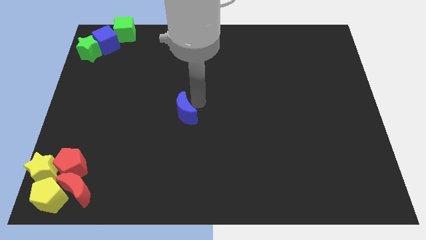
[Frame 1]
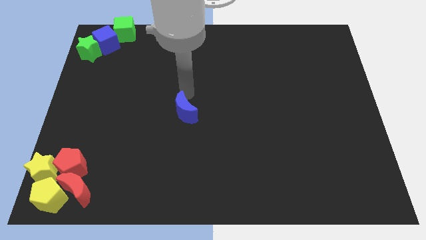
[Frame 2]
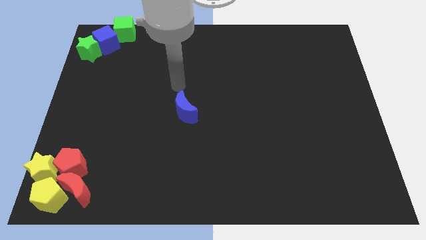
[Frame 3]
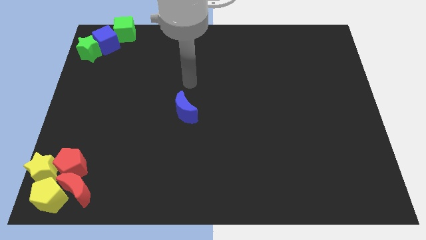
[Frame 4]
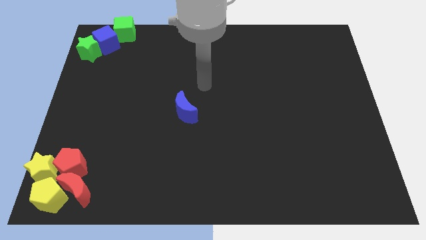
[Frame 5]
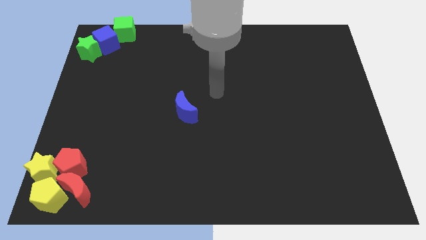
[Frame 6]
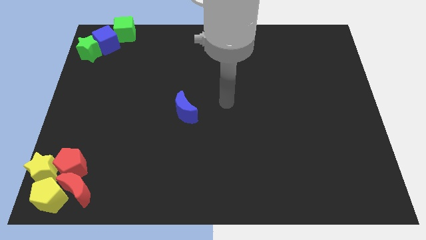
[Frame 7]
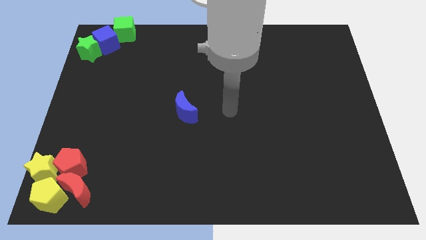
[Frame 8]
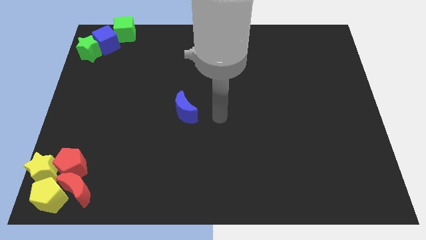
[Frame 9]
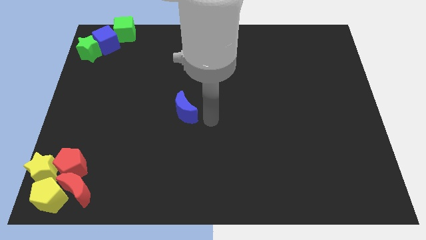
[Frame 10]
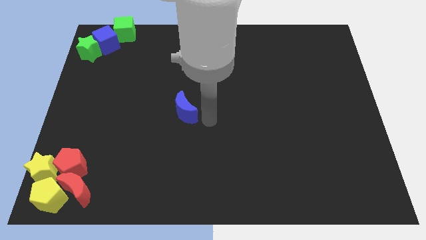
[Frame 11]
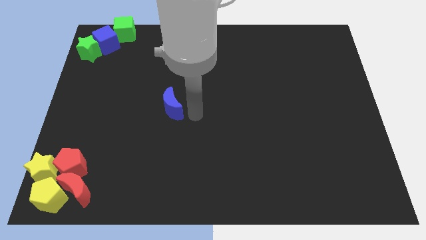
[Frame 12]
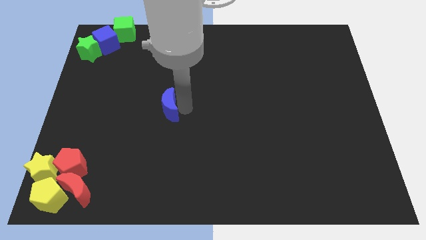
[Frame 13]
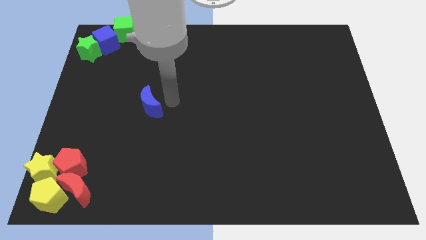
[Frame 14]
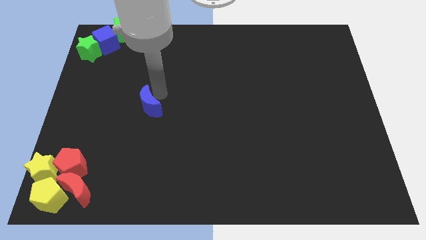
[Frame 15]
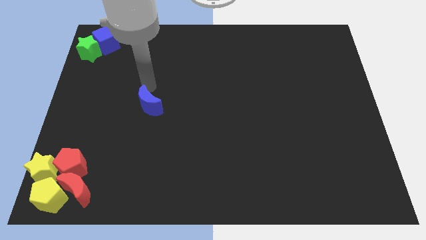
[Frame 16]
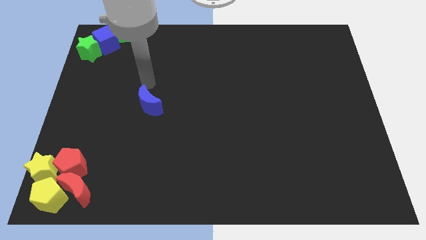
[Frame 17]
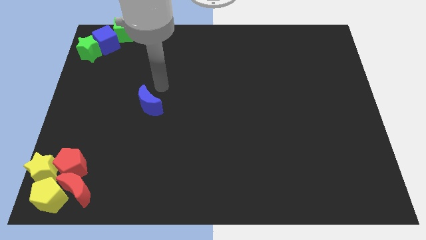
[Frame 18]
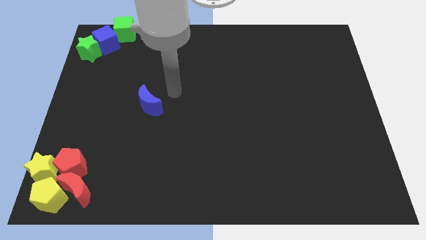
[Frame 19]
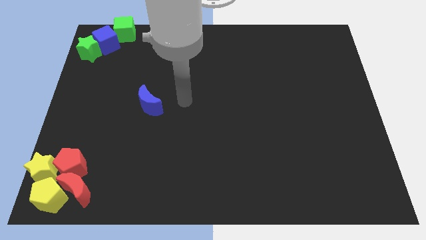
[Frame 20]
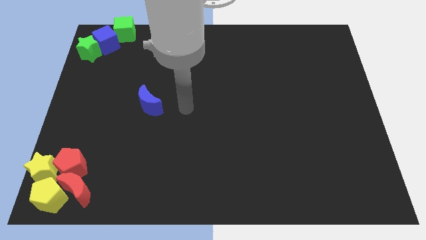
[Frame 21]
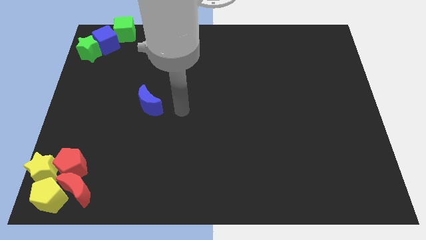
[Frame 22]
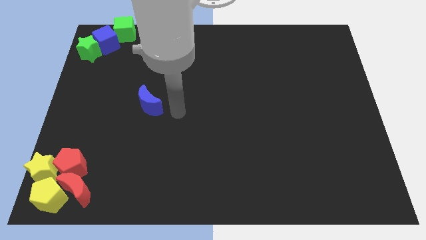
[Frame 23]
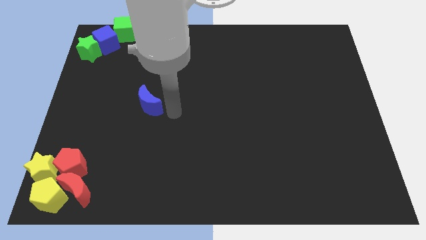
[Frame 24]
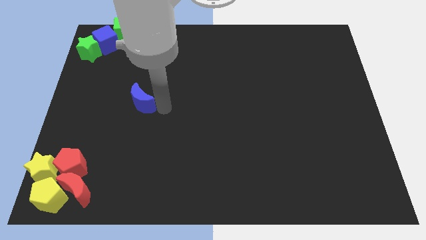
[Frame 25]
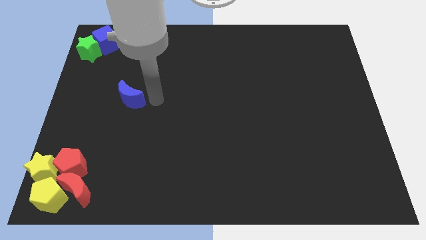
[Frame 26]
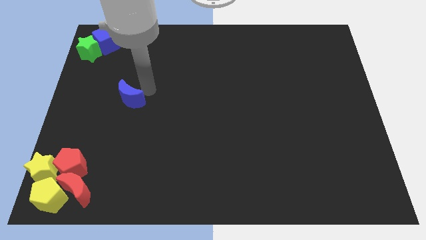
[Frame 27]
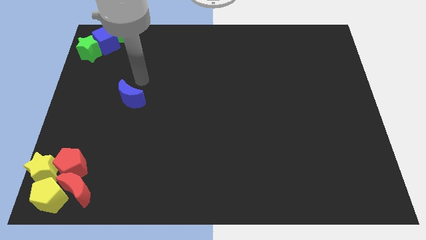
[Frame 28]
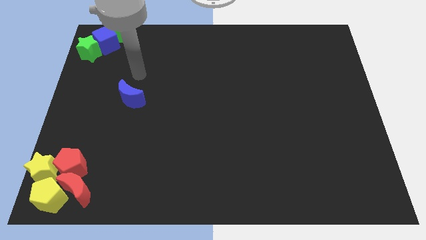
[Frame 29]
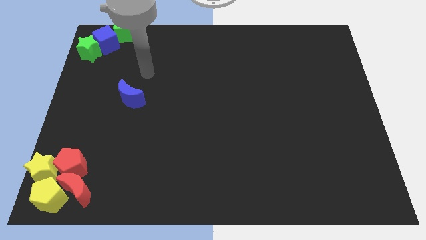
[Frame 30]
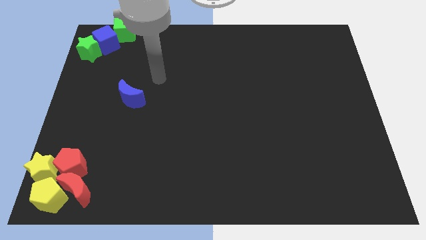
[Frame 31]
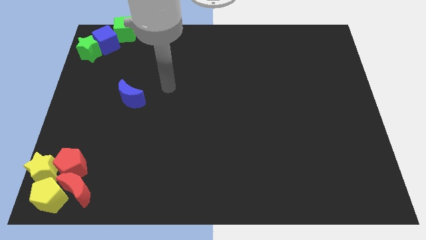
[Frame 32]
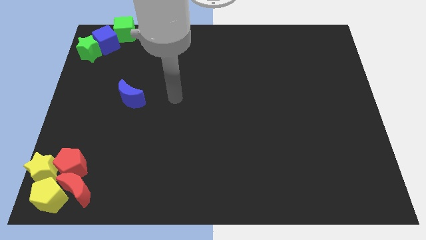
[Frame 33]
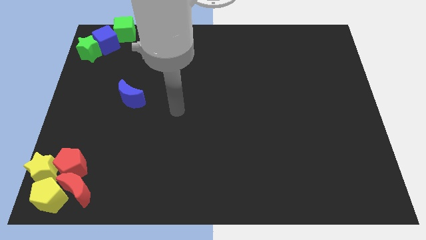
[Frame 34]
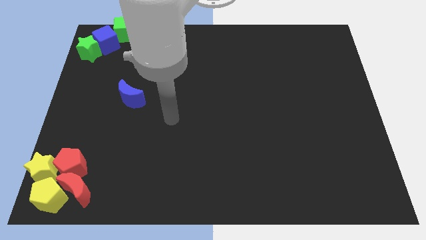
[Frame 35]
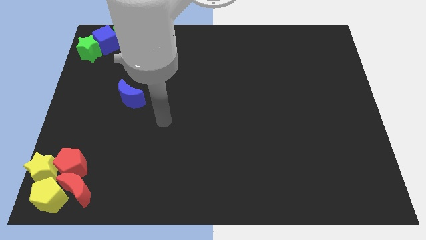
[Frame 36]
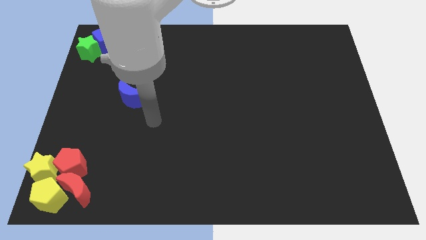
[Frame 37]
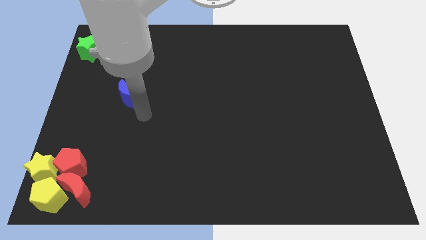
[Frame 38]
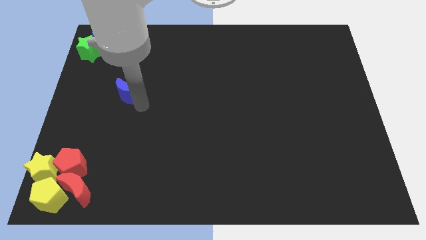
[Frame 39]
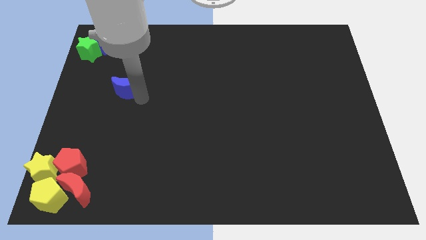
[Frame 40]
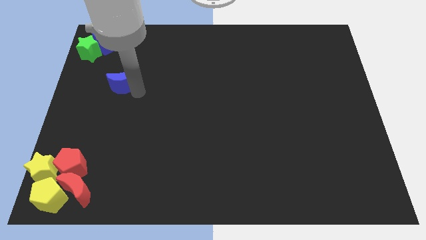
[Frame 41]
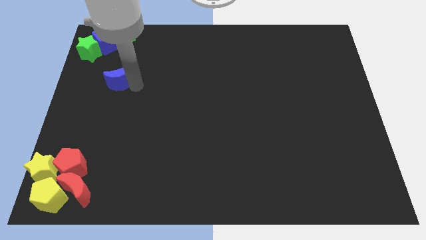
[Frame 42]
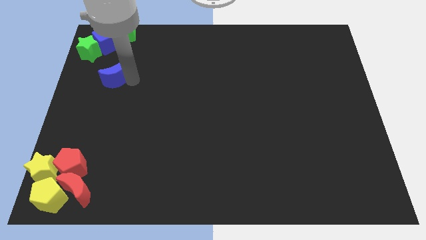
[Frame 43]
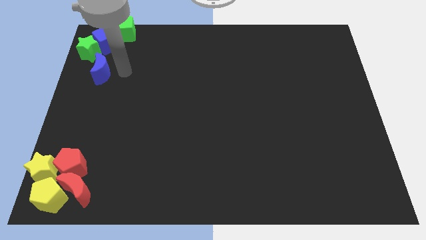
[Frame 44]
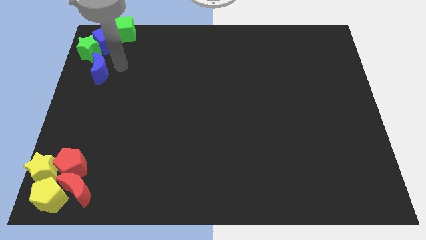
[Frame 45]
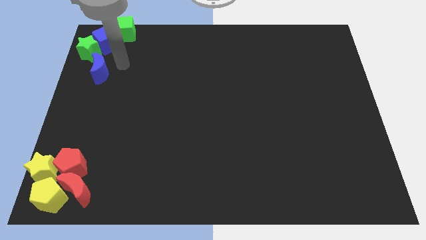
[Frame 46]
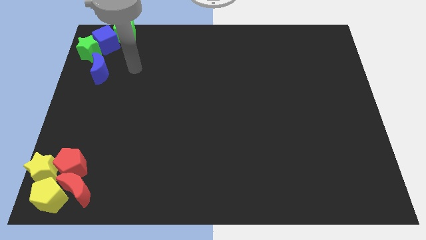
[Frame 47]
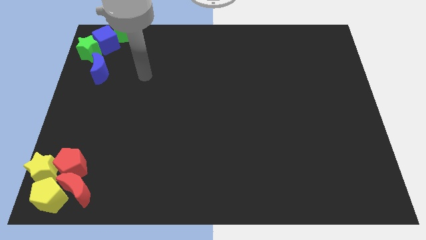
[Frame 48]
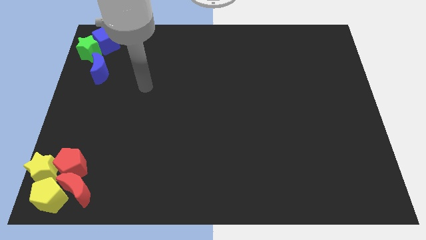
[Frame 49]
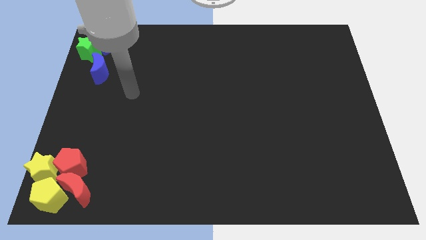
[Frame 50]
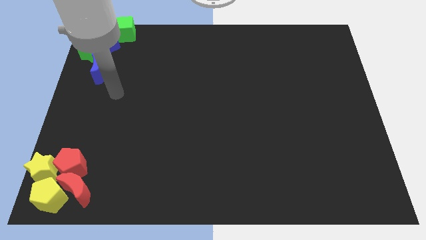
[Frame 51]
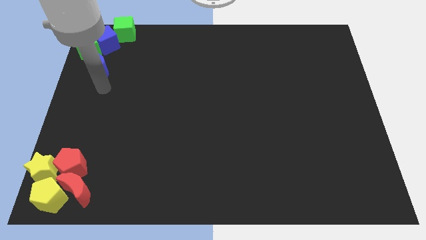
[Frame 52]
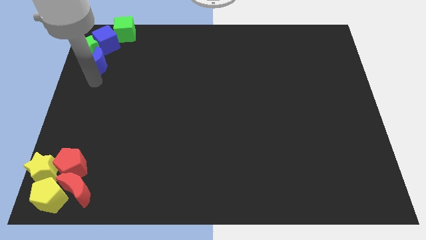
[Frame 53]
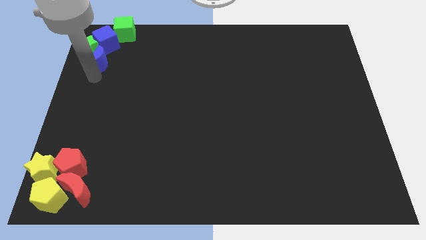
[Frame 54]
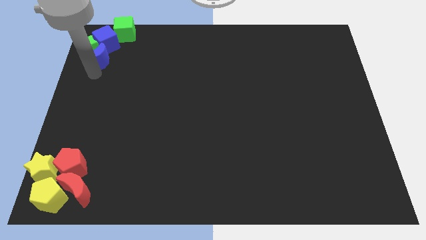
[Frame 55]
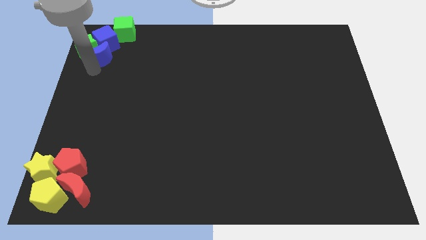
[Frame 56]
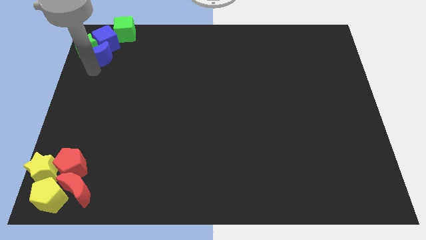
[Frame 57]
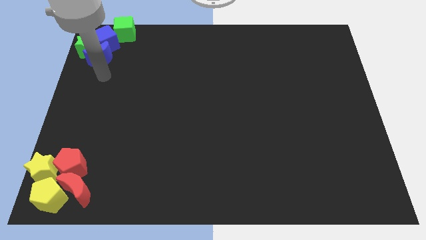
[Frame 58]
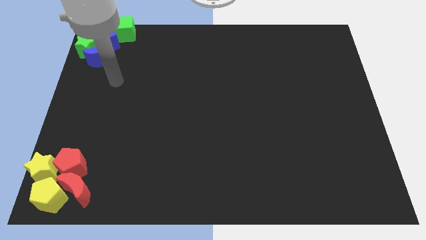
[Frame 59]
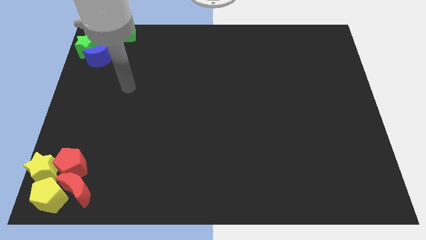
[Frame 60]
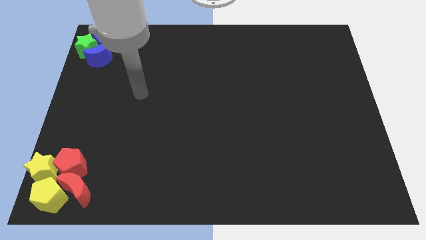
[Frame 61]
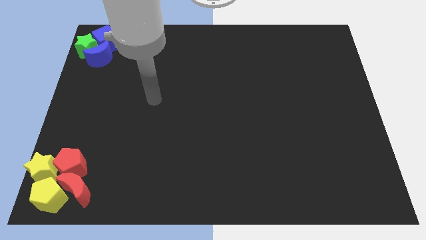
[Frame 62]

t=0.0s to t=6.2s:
move the blue crescent into the green star

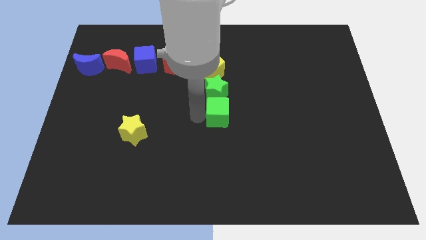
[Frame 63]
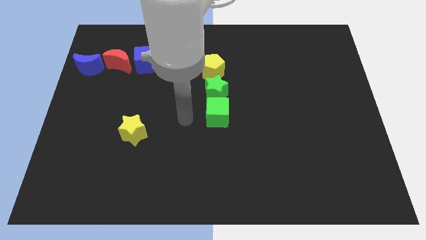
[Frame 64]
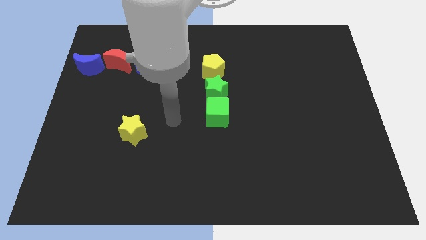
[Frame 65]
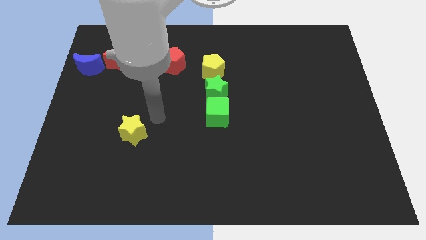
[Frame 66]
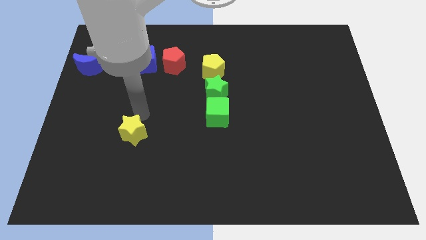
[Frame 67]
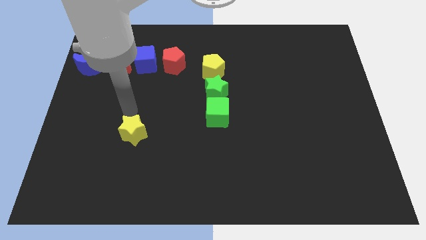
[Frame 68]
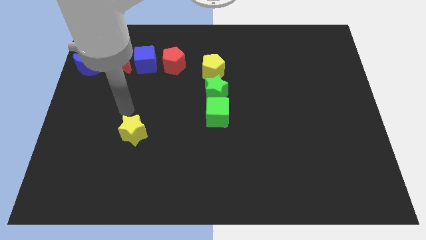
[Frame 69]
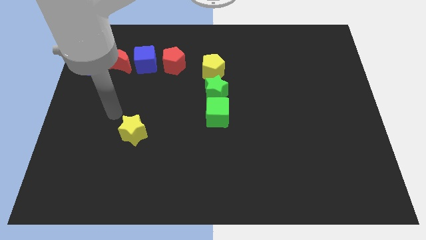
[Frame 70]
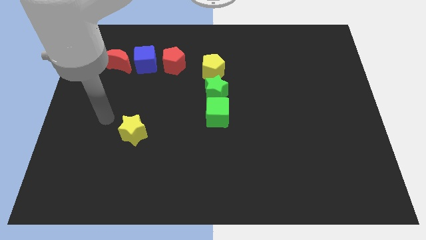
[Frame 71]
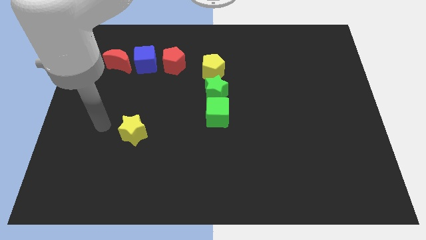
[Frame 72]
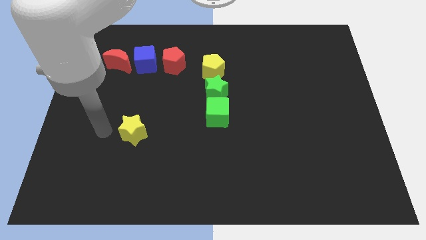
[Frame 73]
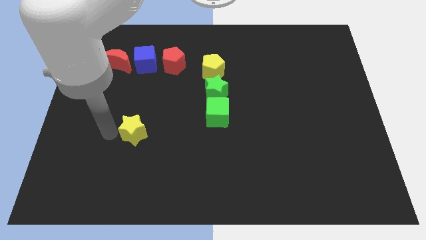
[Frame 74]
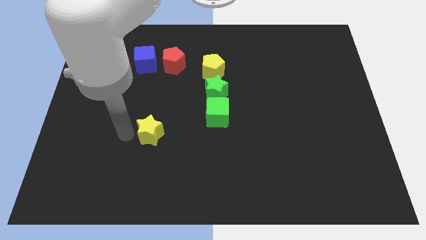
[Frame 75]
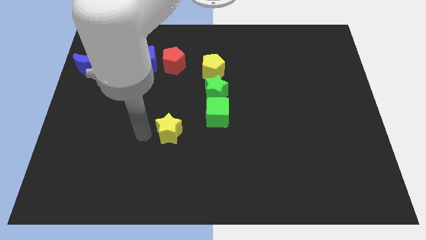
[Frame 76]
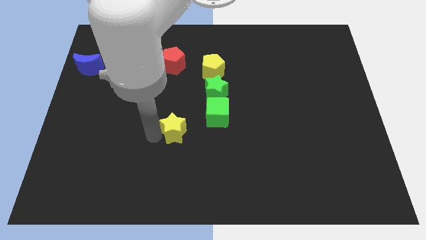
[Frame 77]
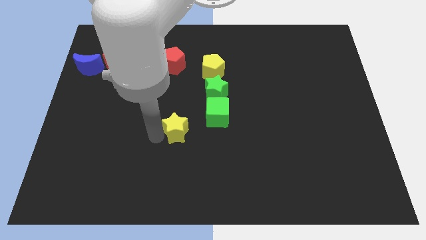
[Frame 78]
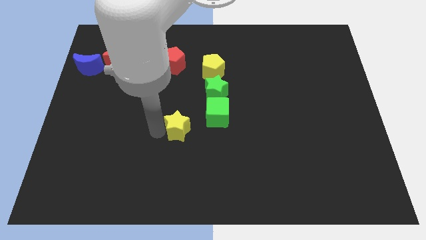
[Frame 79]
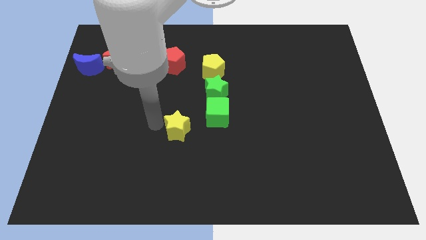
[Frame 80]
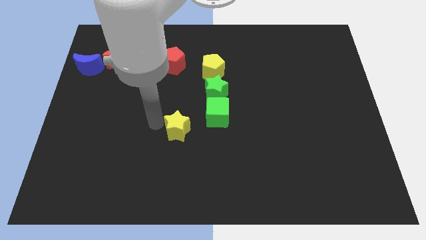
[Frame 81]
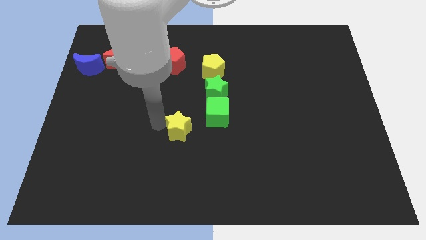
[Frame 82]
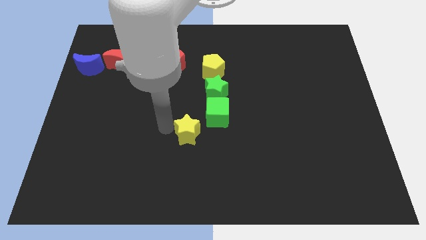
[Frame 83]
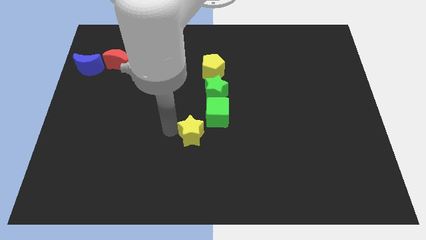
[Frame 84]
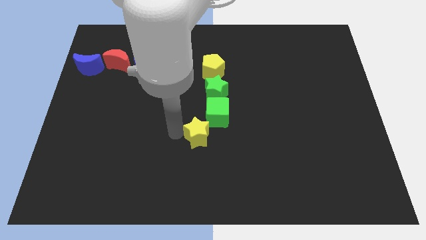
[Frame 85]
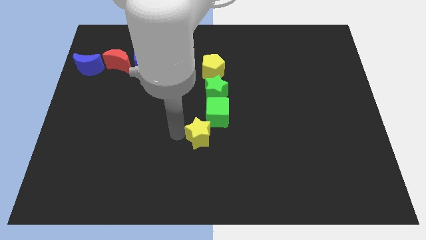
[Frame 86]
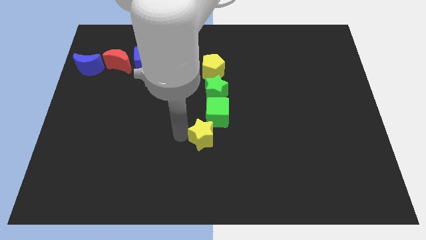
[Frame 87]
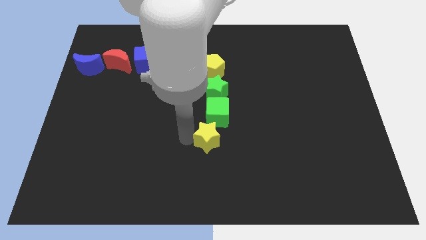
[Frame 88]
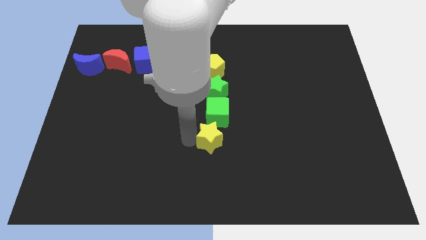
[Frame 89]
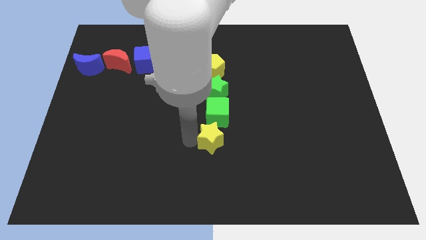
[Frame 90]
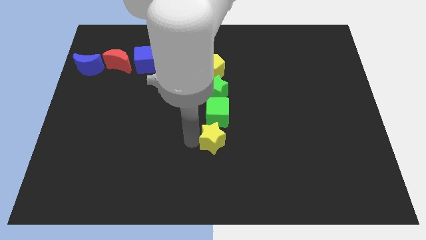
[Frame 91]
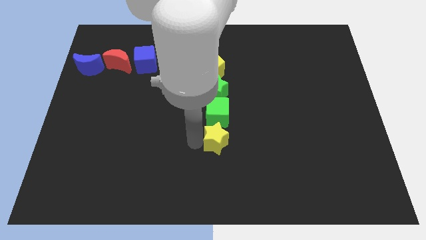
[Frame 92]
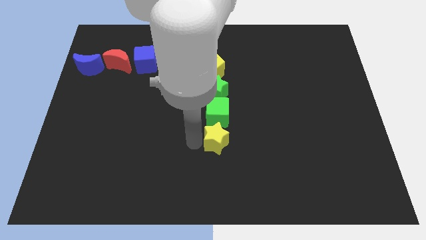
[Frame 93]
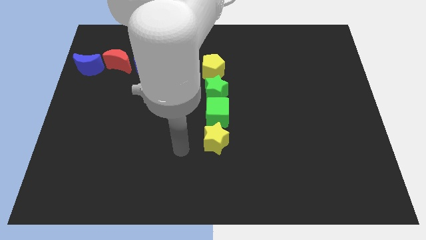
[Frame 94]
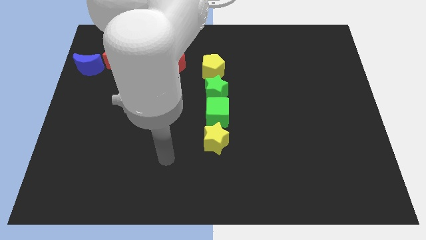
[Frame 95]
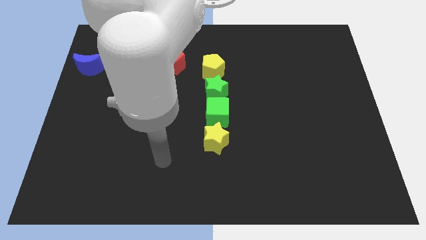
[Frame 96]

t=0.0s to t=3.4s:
slide the yellow star under the green cube
